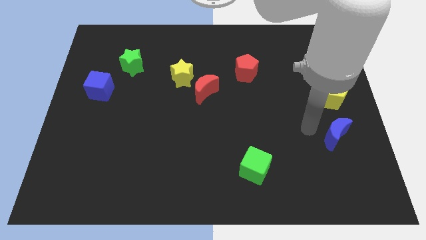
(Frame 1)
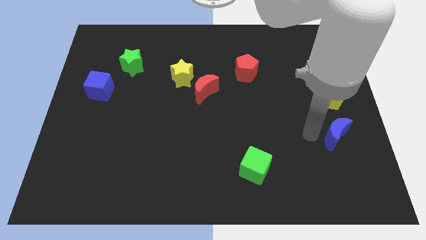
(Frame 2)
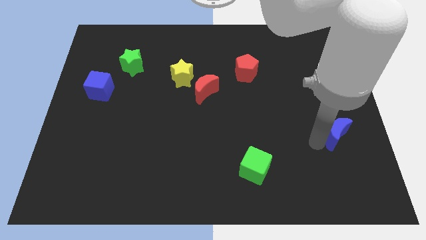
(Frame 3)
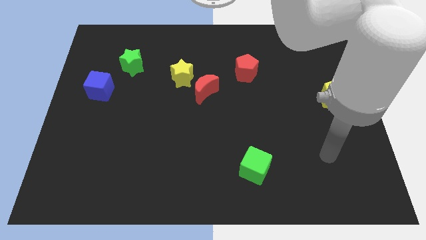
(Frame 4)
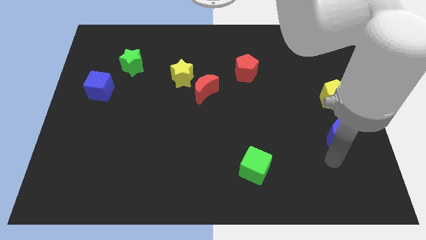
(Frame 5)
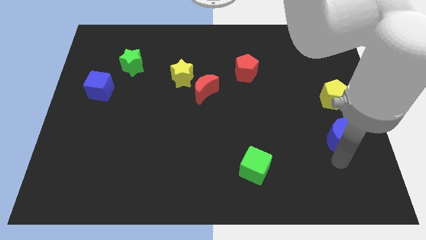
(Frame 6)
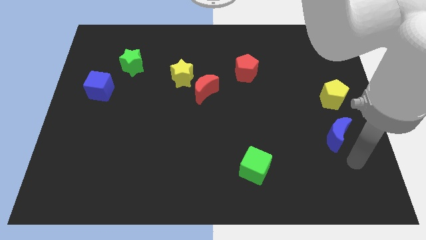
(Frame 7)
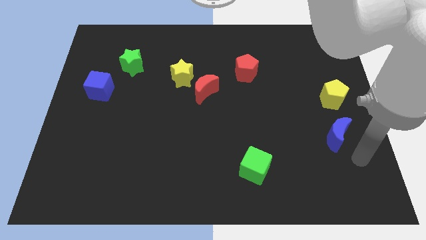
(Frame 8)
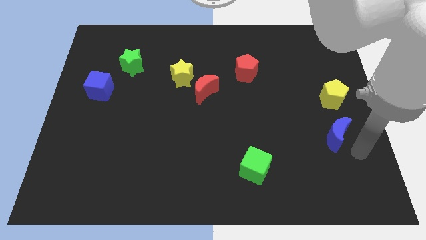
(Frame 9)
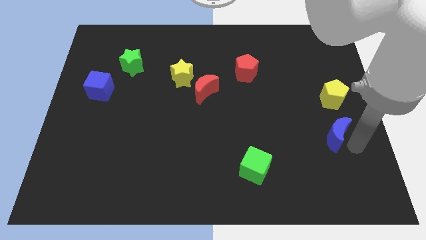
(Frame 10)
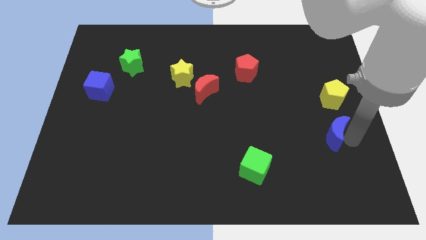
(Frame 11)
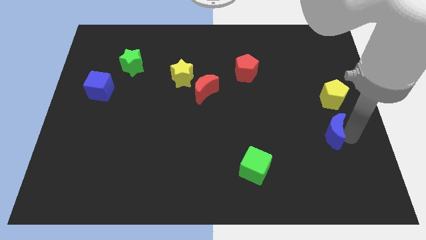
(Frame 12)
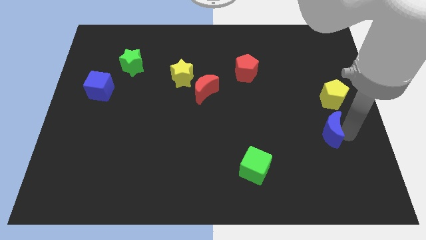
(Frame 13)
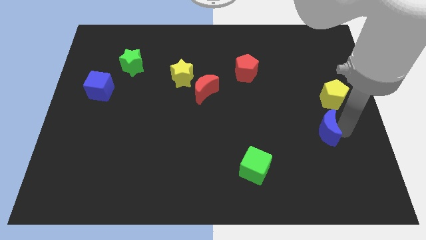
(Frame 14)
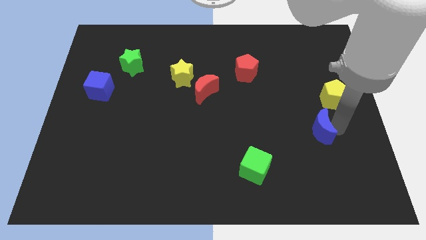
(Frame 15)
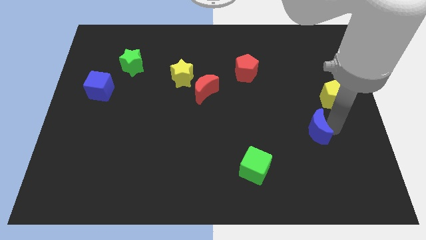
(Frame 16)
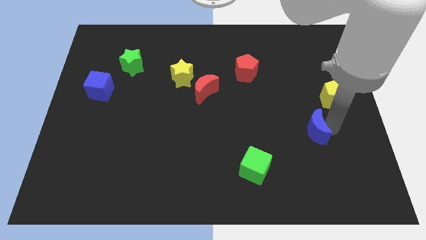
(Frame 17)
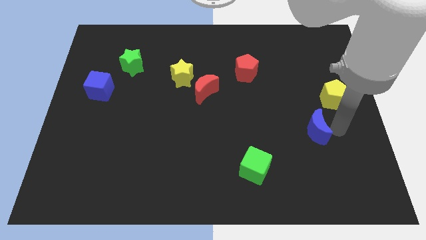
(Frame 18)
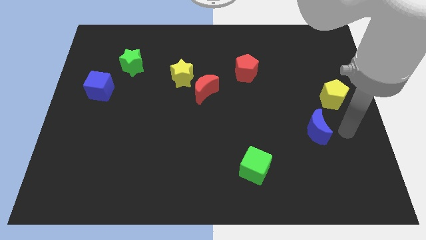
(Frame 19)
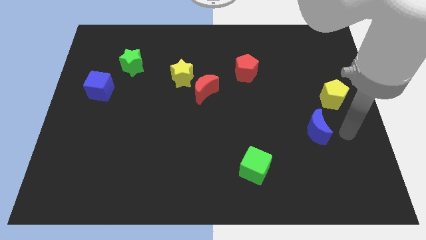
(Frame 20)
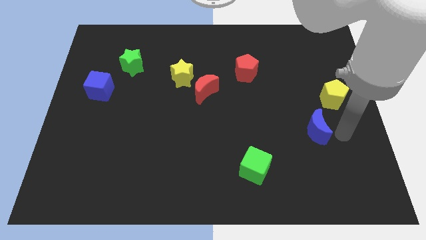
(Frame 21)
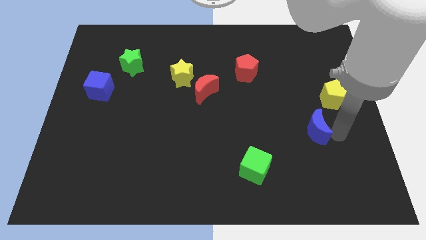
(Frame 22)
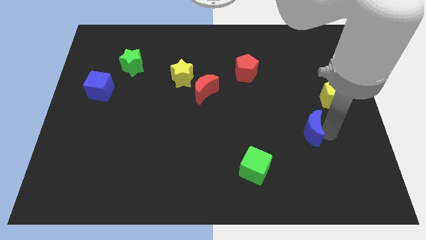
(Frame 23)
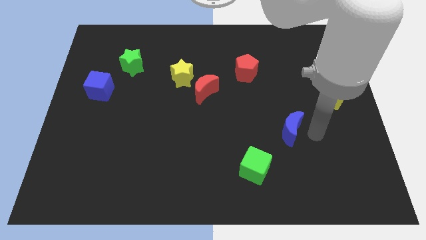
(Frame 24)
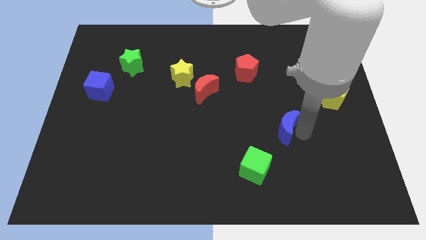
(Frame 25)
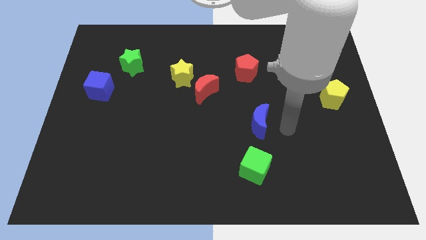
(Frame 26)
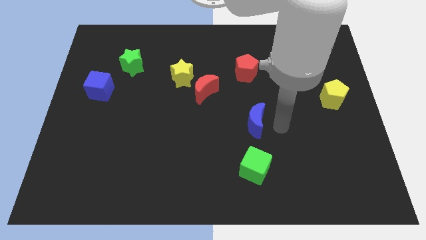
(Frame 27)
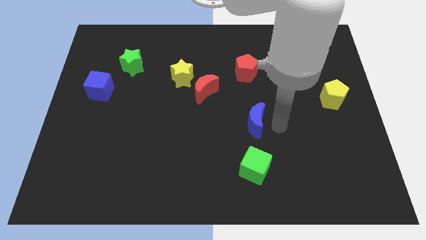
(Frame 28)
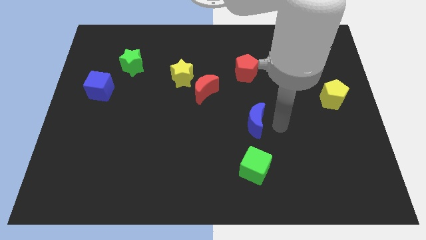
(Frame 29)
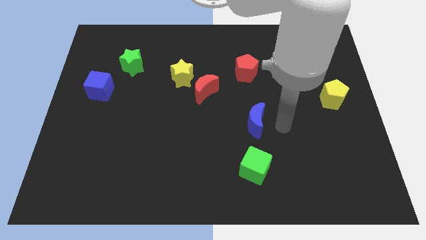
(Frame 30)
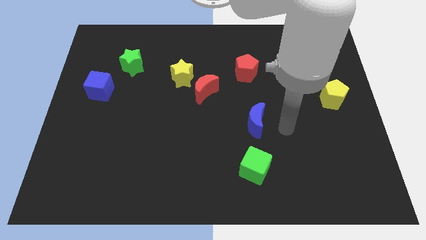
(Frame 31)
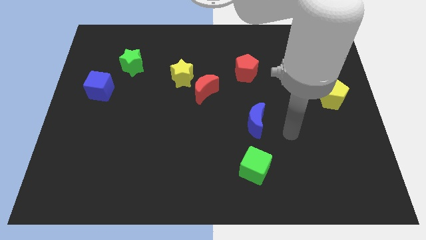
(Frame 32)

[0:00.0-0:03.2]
move the blue moon above the green cube

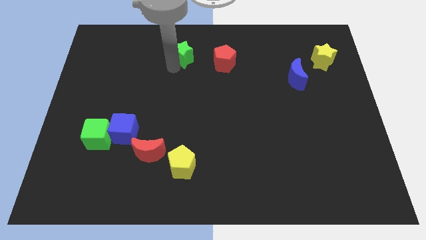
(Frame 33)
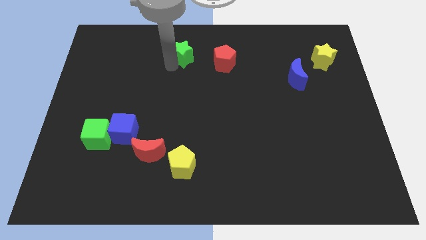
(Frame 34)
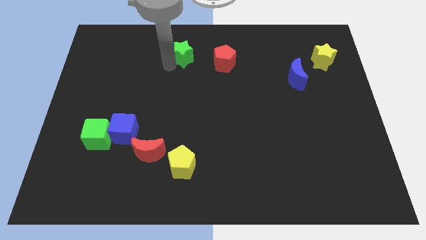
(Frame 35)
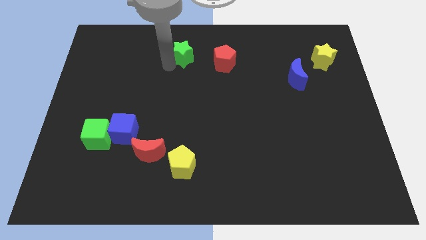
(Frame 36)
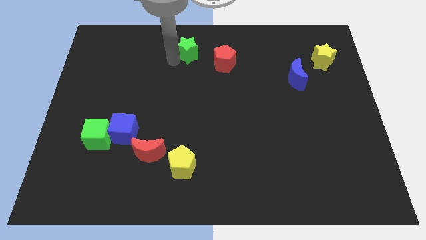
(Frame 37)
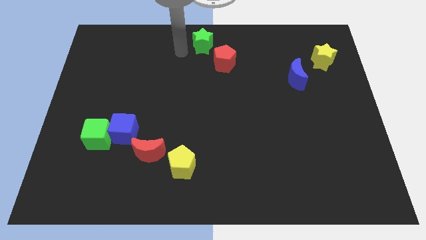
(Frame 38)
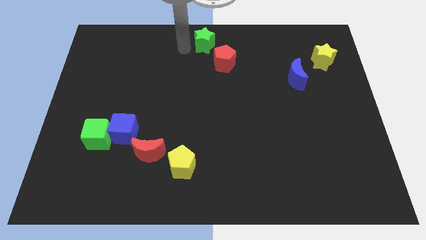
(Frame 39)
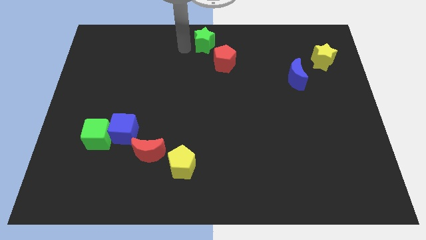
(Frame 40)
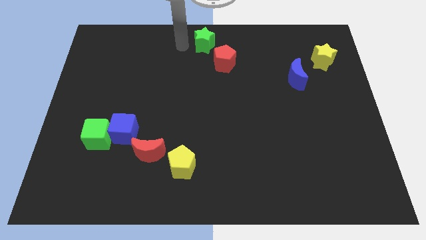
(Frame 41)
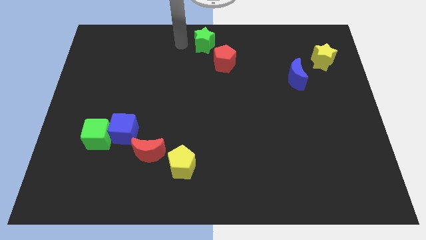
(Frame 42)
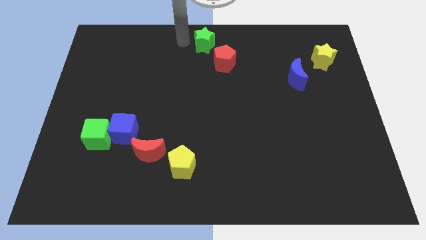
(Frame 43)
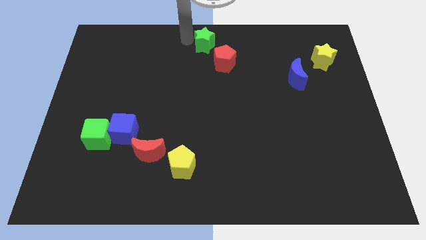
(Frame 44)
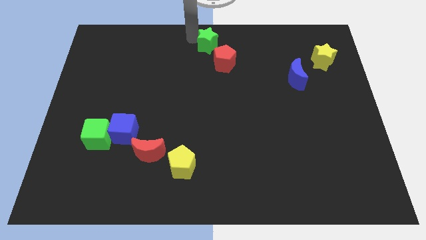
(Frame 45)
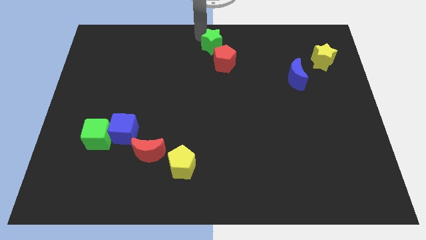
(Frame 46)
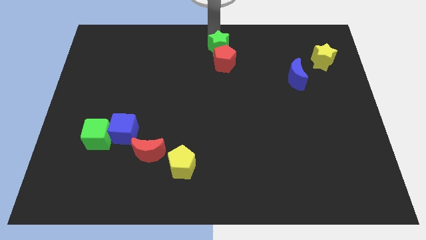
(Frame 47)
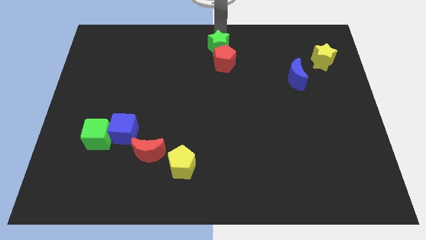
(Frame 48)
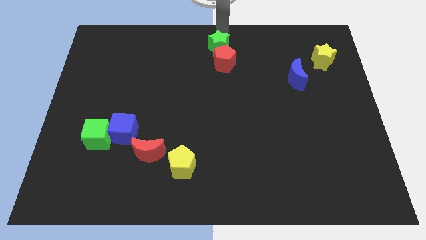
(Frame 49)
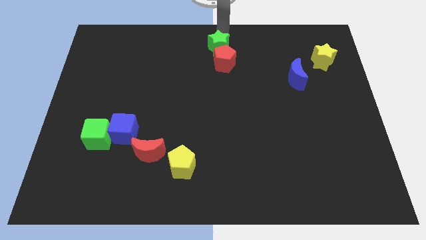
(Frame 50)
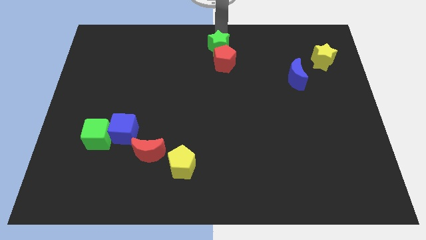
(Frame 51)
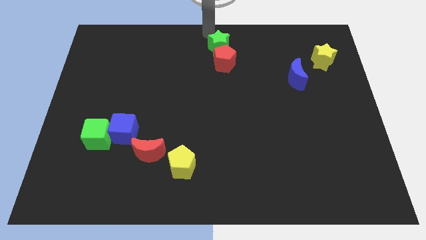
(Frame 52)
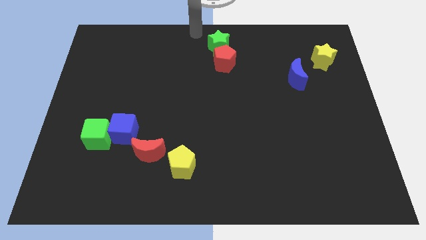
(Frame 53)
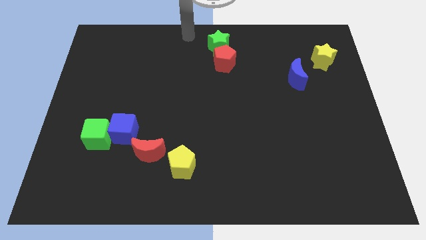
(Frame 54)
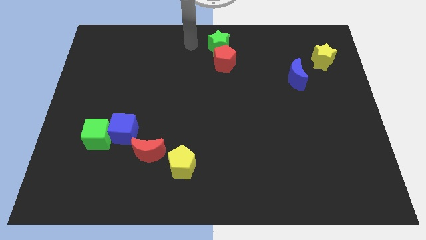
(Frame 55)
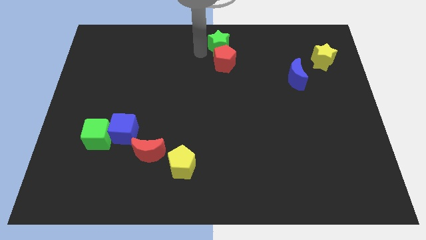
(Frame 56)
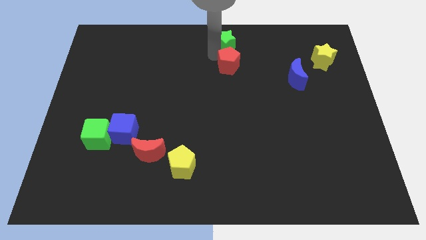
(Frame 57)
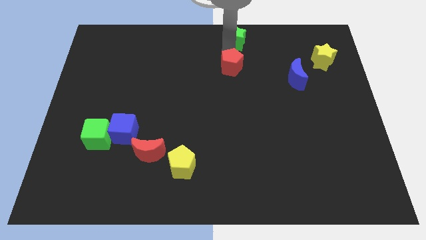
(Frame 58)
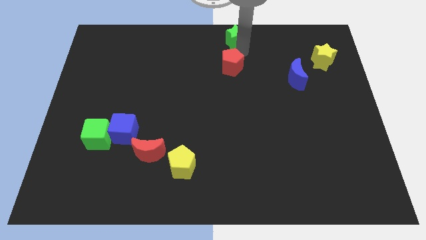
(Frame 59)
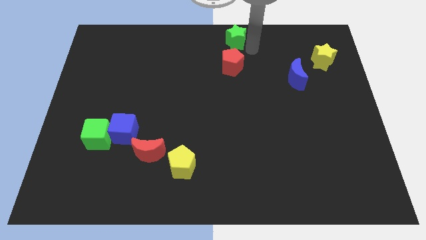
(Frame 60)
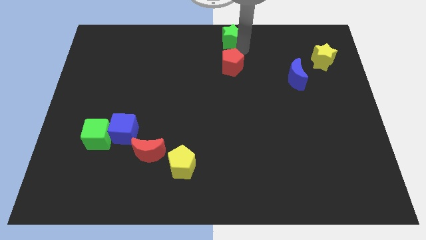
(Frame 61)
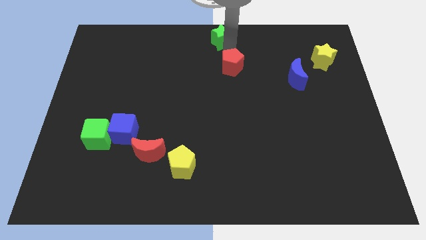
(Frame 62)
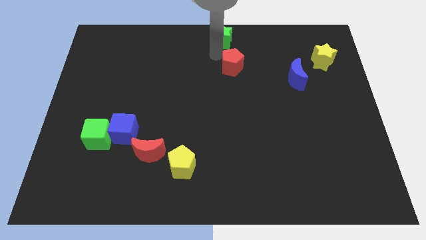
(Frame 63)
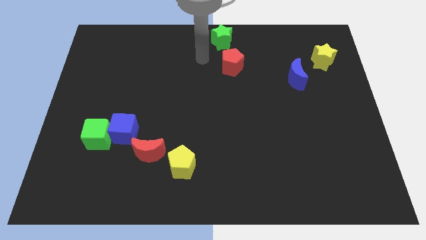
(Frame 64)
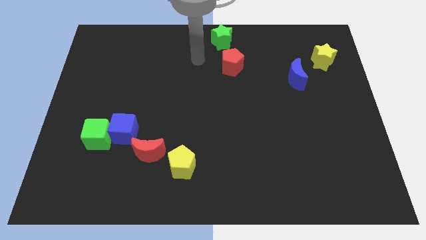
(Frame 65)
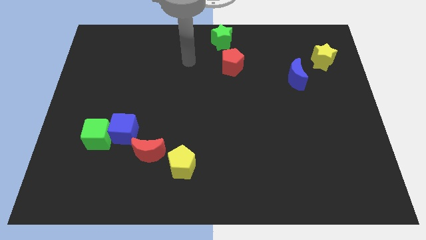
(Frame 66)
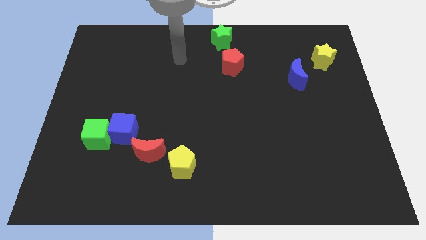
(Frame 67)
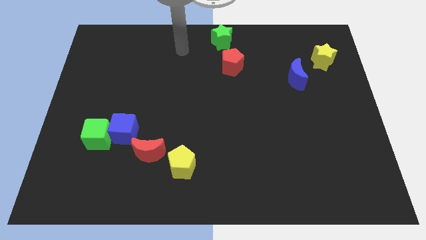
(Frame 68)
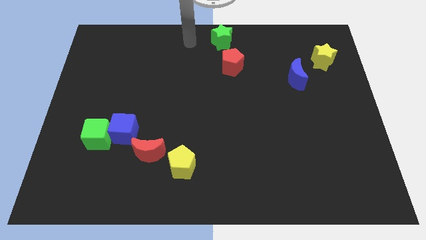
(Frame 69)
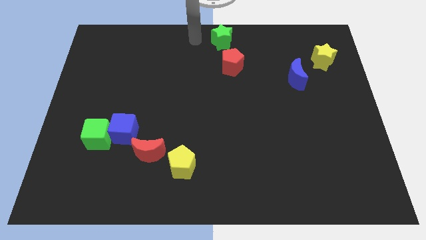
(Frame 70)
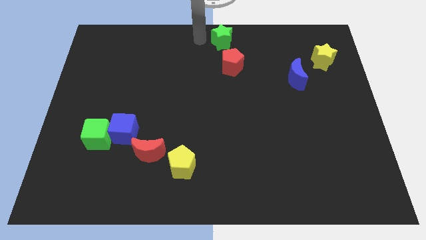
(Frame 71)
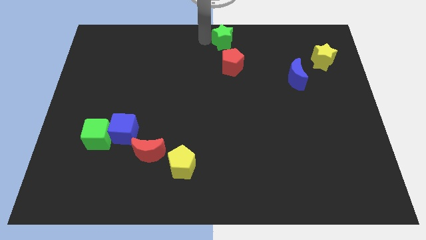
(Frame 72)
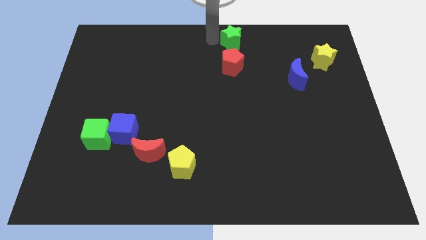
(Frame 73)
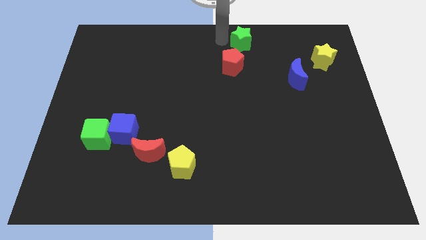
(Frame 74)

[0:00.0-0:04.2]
put the green star at the top center of the board

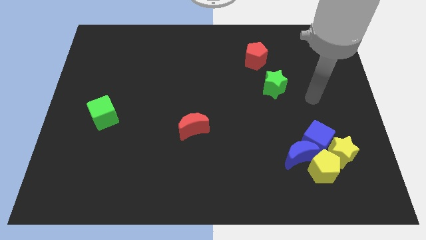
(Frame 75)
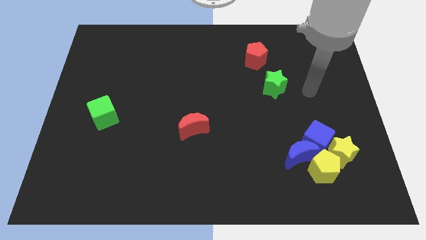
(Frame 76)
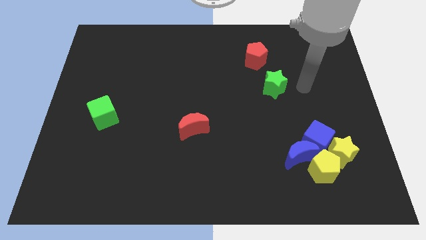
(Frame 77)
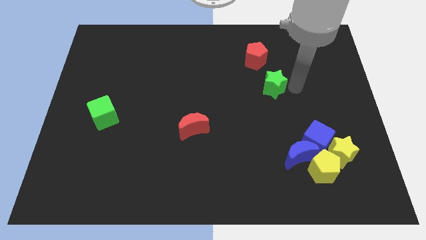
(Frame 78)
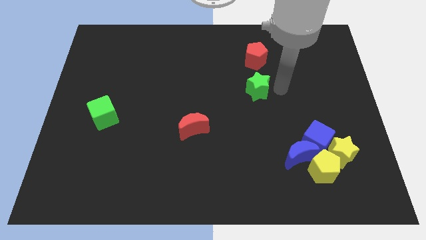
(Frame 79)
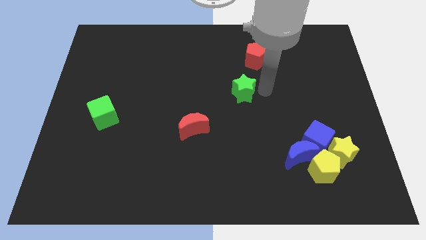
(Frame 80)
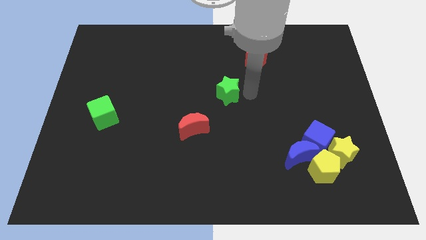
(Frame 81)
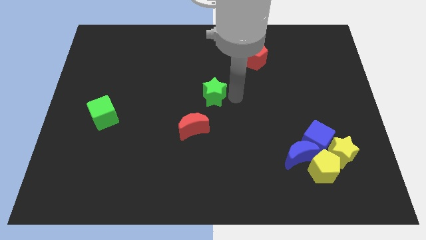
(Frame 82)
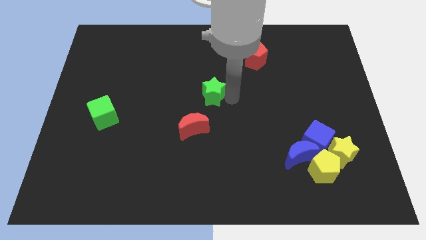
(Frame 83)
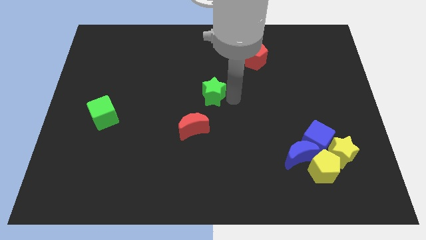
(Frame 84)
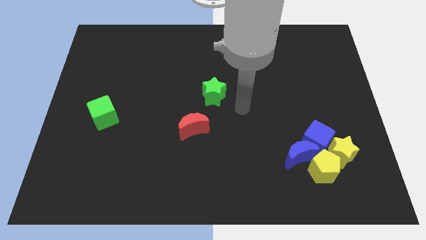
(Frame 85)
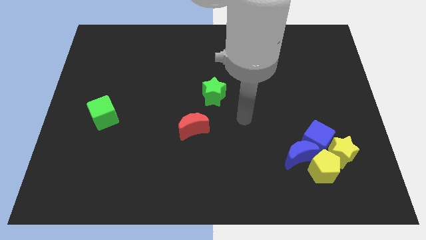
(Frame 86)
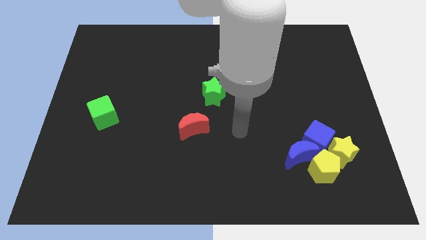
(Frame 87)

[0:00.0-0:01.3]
place the green star at the top right of the red moon

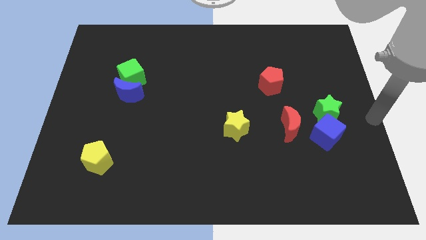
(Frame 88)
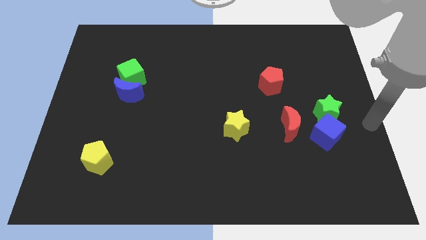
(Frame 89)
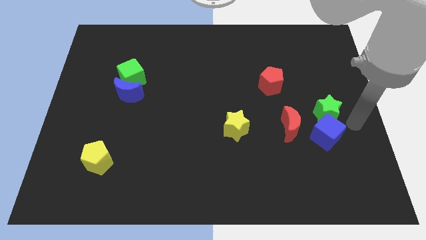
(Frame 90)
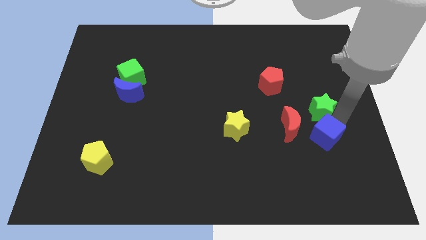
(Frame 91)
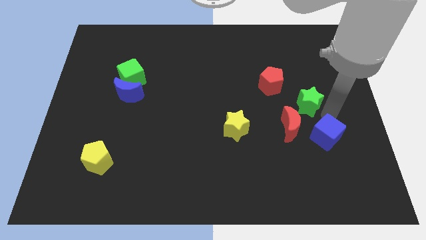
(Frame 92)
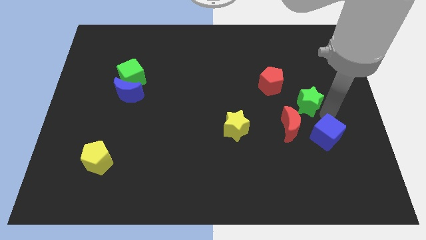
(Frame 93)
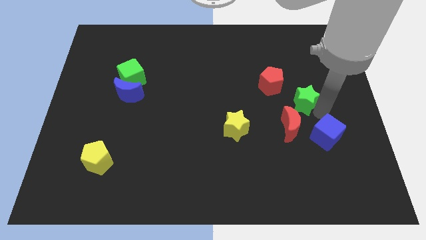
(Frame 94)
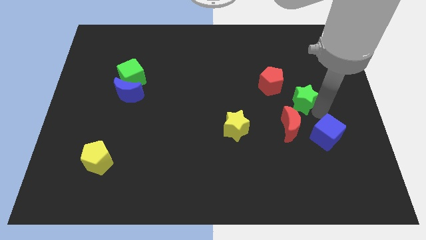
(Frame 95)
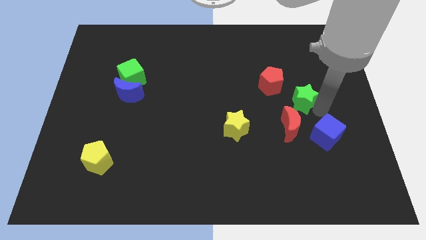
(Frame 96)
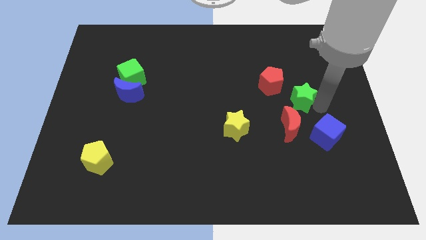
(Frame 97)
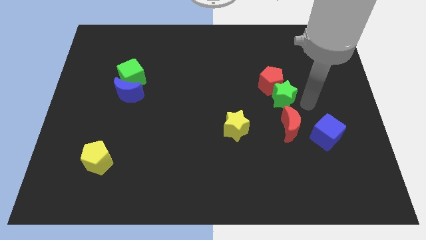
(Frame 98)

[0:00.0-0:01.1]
place the green star above the red crescent
